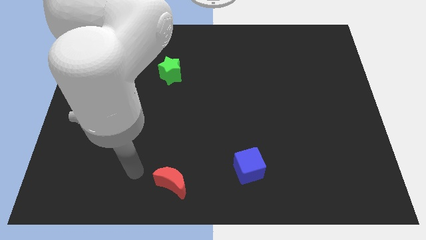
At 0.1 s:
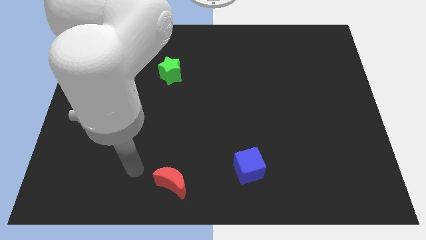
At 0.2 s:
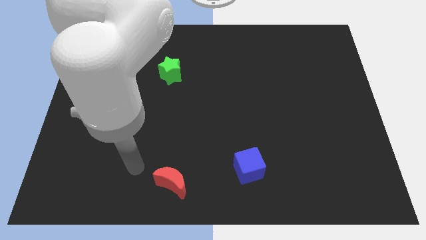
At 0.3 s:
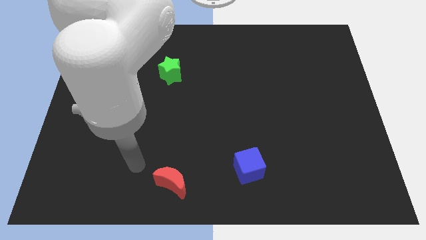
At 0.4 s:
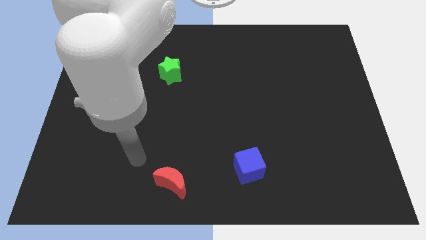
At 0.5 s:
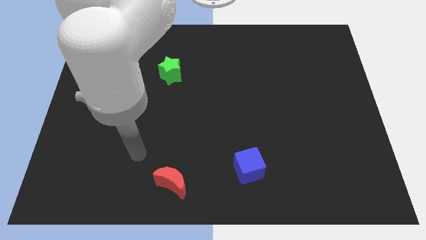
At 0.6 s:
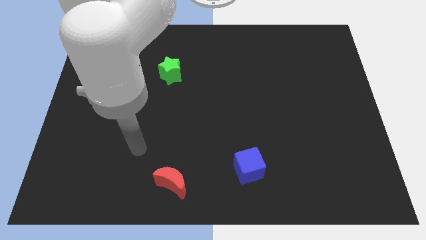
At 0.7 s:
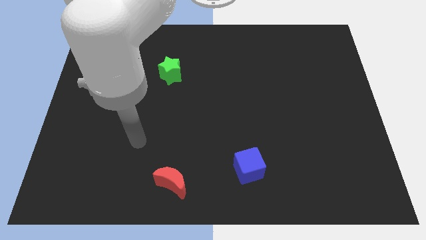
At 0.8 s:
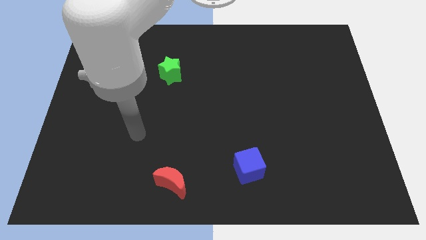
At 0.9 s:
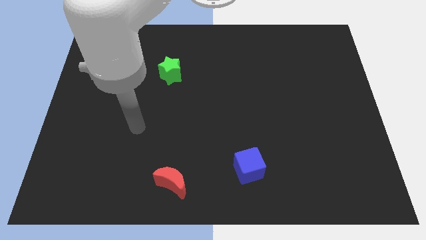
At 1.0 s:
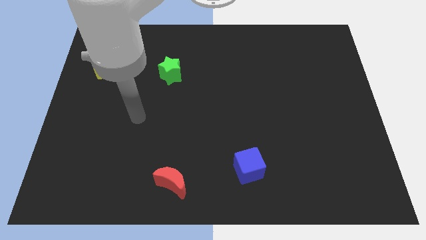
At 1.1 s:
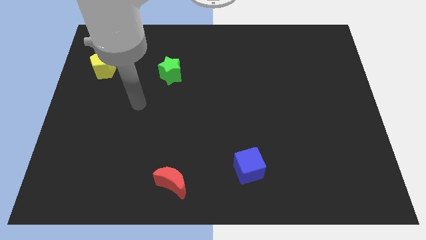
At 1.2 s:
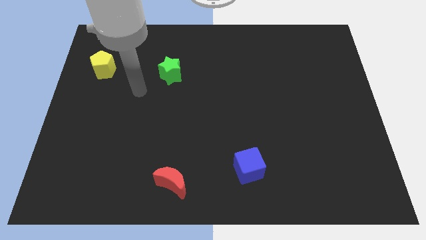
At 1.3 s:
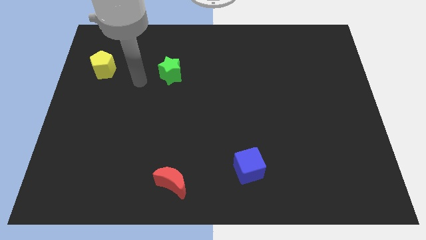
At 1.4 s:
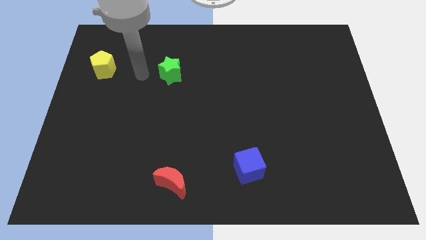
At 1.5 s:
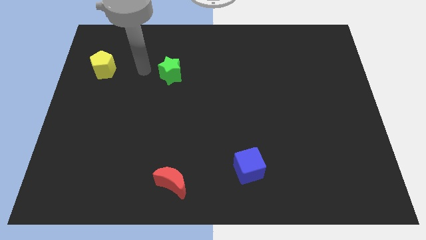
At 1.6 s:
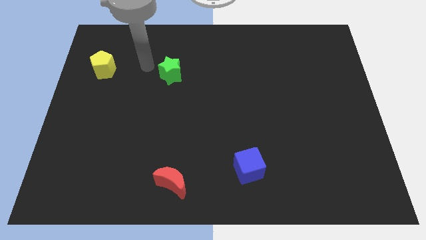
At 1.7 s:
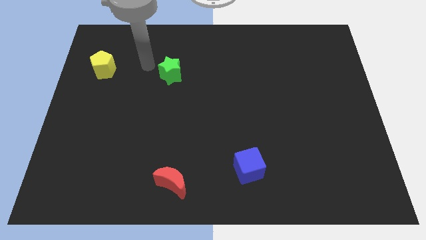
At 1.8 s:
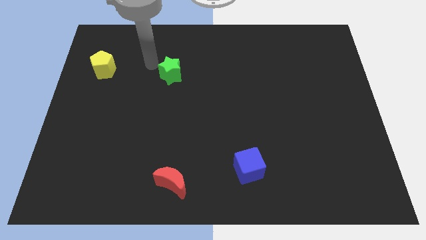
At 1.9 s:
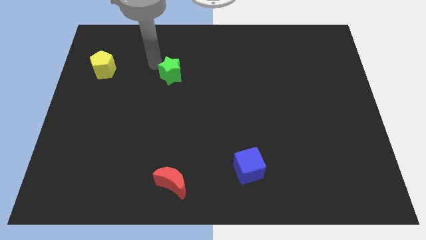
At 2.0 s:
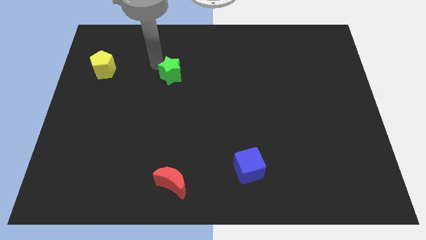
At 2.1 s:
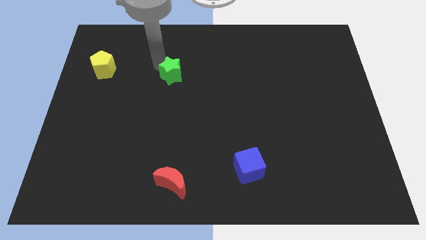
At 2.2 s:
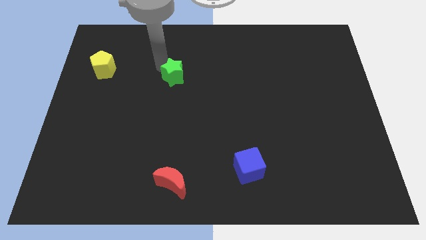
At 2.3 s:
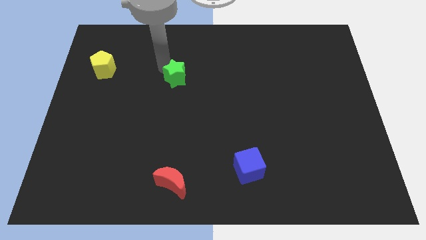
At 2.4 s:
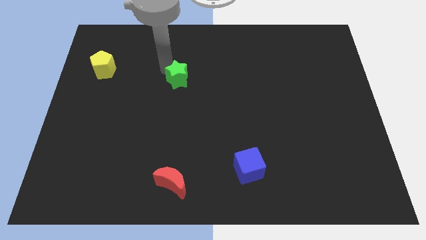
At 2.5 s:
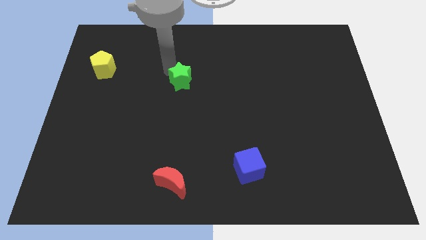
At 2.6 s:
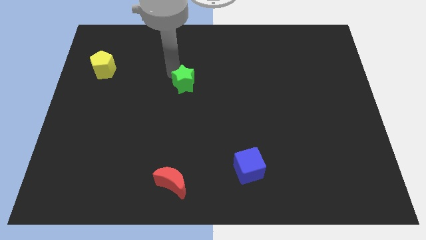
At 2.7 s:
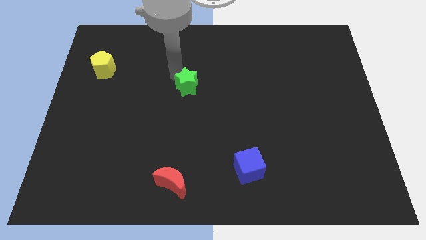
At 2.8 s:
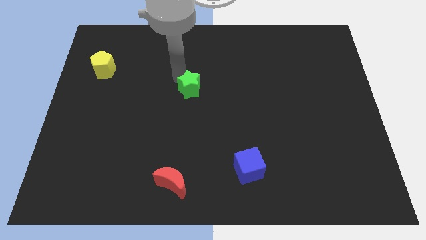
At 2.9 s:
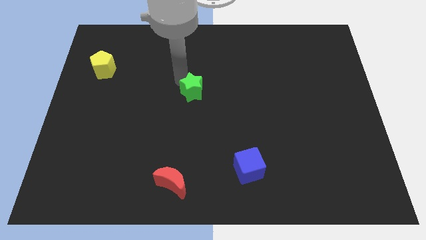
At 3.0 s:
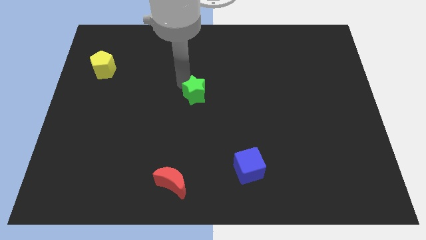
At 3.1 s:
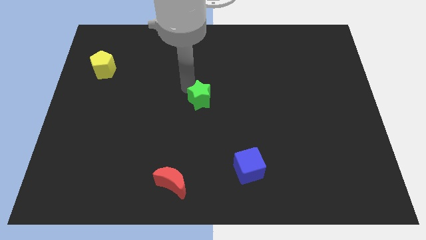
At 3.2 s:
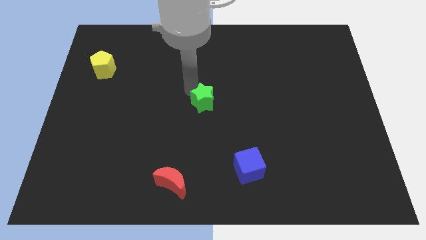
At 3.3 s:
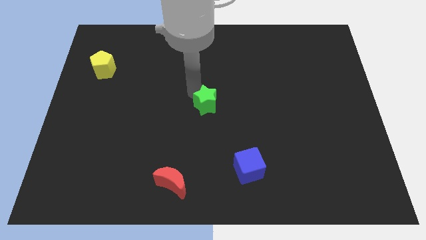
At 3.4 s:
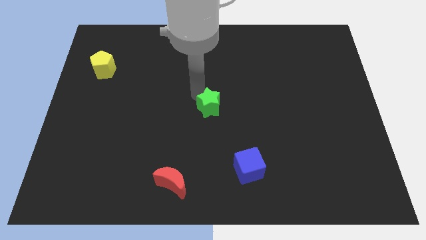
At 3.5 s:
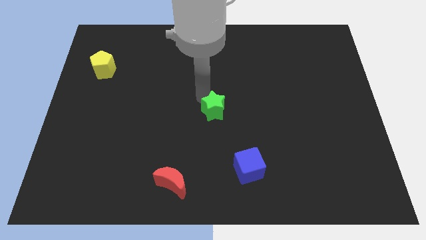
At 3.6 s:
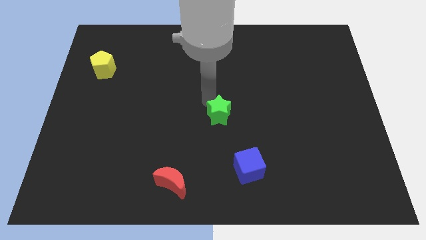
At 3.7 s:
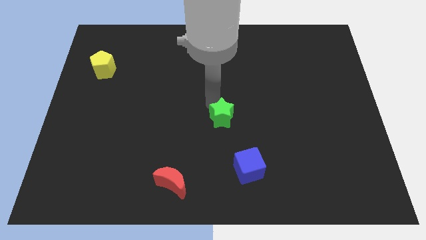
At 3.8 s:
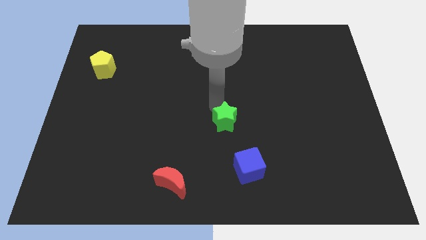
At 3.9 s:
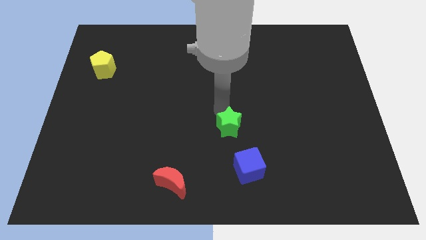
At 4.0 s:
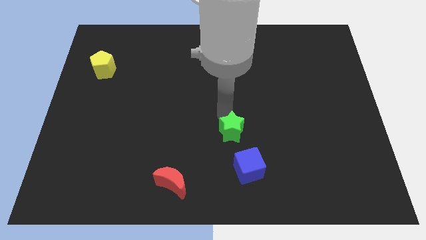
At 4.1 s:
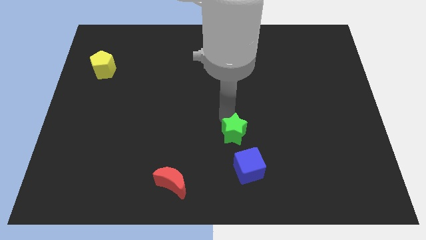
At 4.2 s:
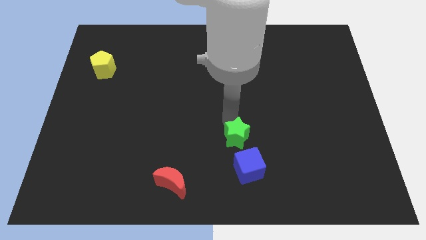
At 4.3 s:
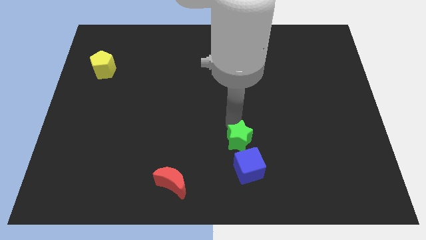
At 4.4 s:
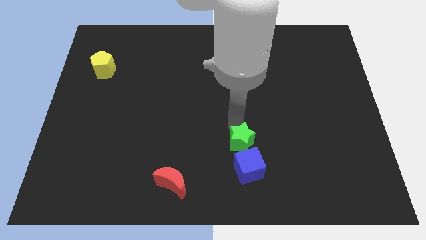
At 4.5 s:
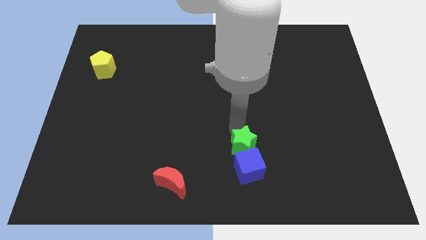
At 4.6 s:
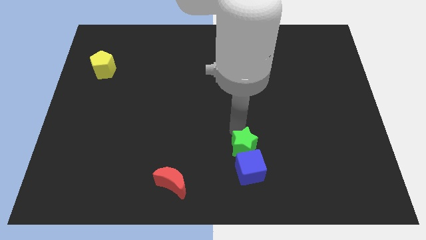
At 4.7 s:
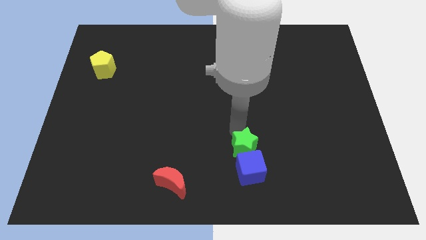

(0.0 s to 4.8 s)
move the green block towards the blue block

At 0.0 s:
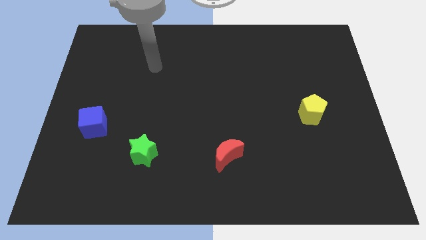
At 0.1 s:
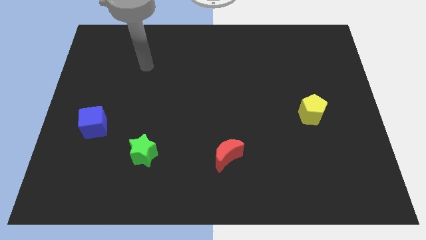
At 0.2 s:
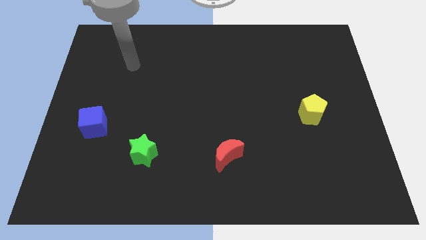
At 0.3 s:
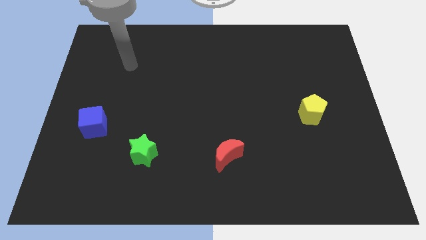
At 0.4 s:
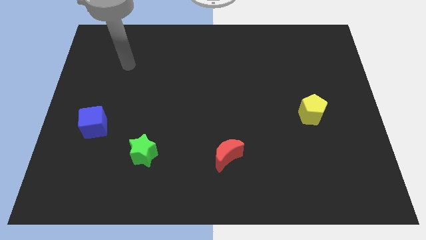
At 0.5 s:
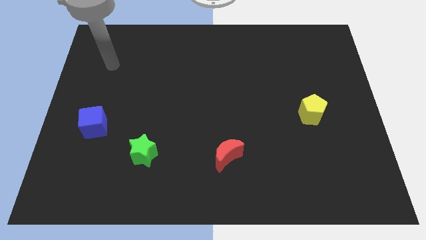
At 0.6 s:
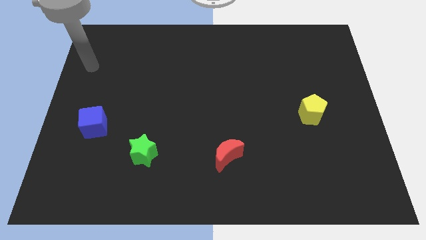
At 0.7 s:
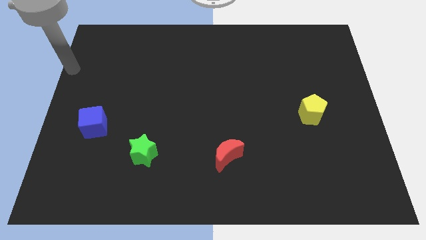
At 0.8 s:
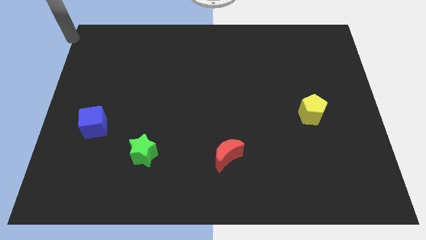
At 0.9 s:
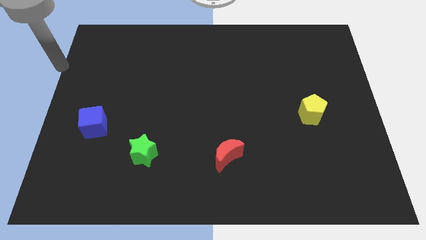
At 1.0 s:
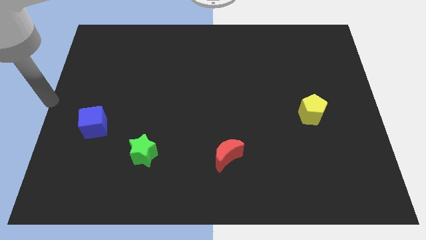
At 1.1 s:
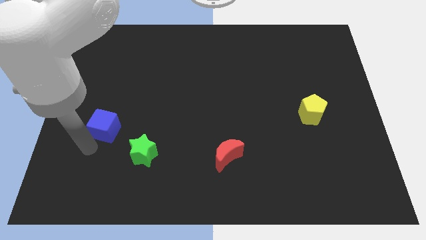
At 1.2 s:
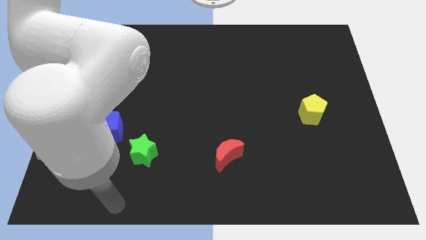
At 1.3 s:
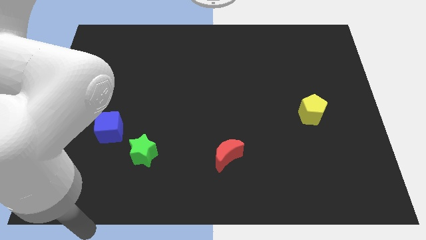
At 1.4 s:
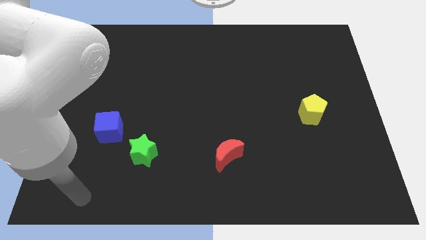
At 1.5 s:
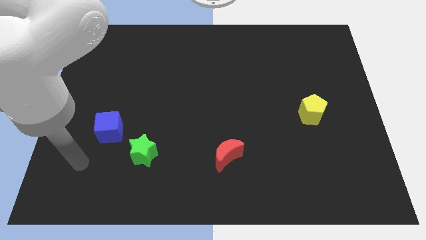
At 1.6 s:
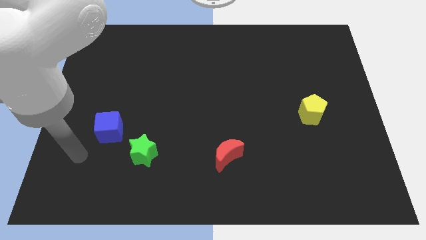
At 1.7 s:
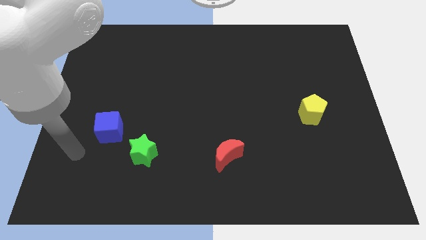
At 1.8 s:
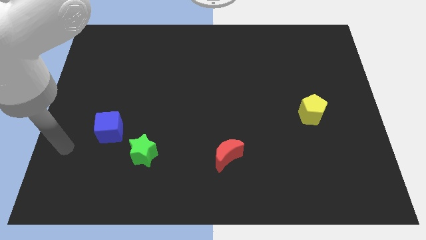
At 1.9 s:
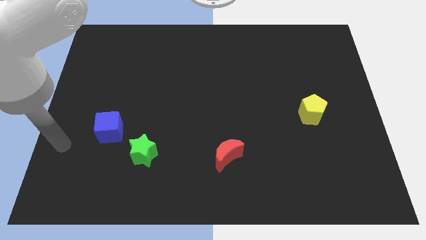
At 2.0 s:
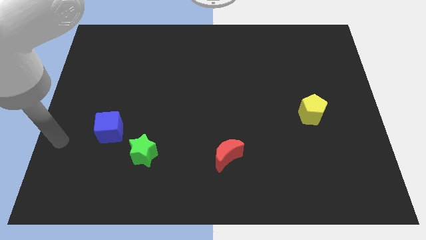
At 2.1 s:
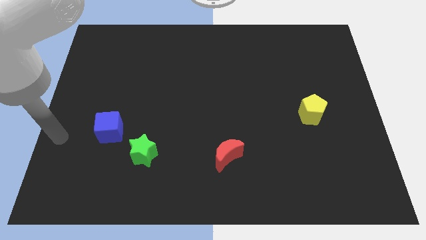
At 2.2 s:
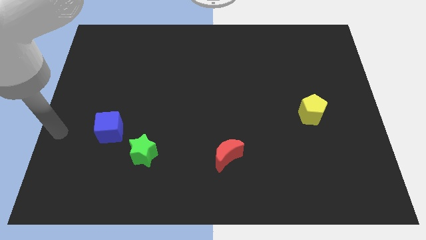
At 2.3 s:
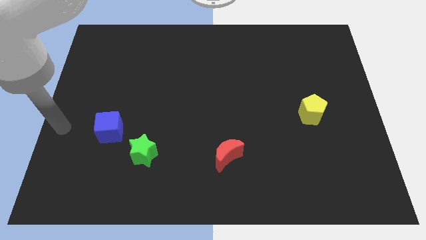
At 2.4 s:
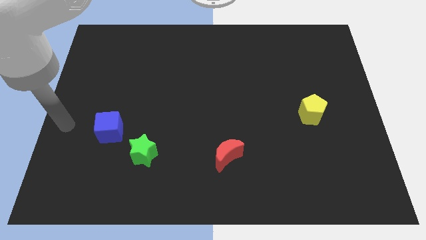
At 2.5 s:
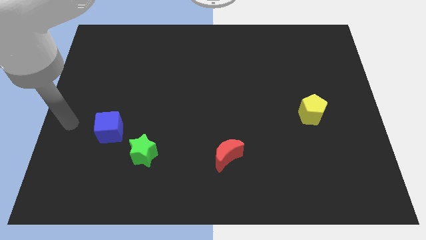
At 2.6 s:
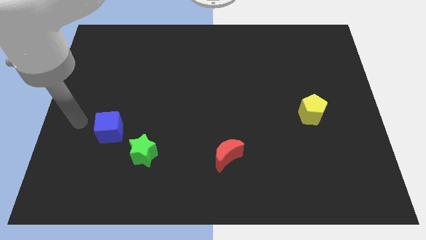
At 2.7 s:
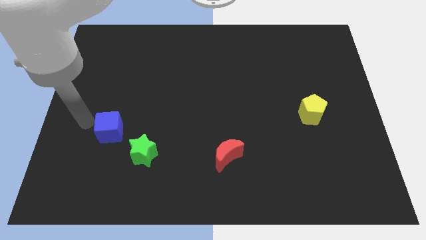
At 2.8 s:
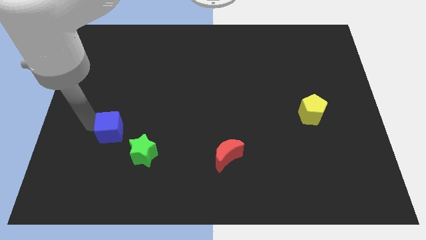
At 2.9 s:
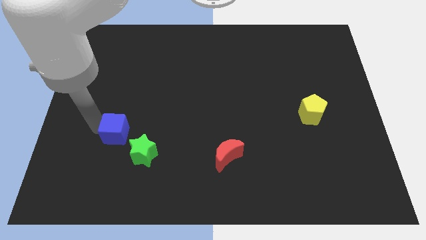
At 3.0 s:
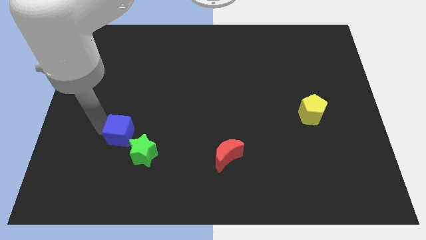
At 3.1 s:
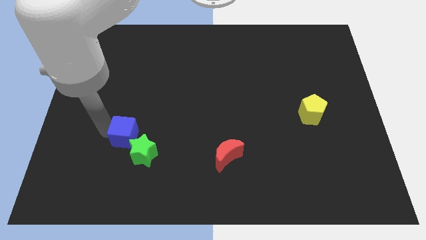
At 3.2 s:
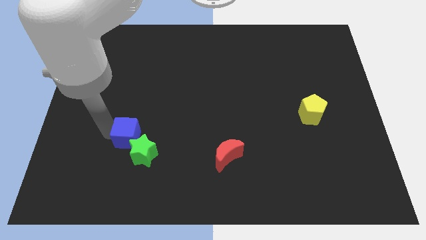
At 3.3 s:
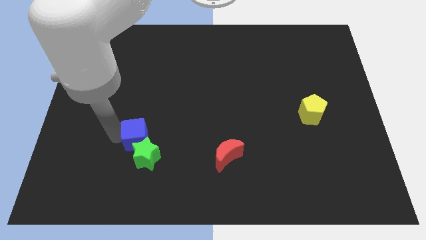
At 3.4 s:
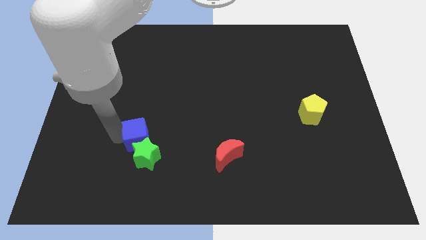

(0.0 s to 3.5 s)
push the cube close to the star

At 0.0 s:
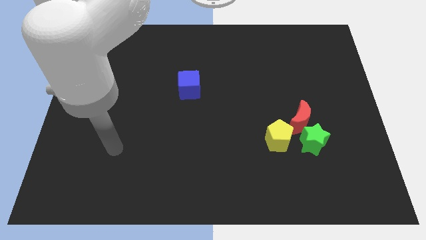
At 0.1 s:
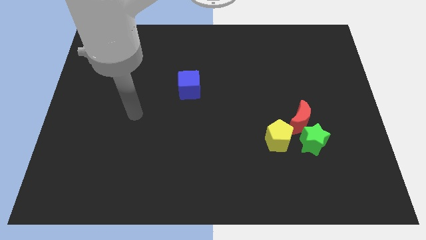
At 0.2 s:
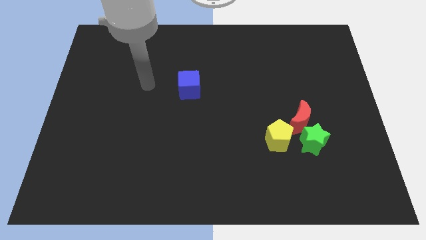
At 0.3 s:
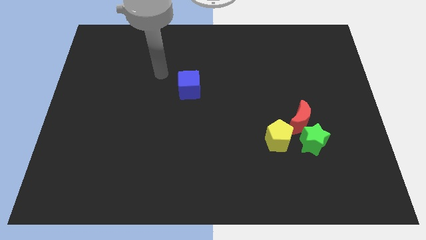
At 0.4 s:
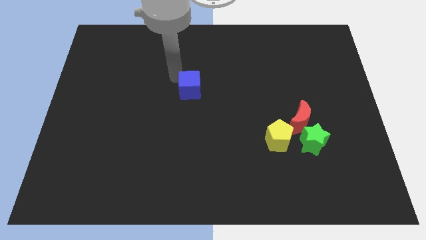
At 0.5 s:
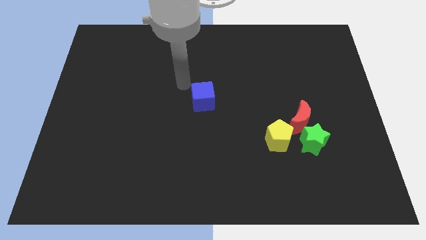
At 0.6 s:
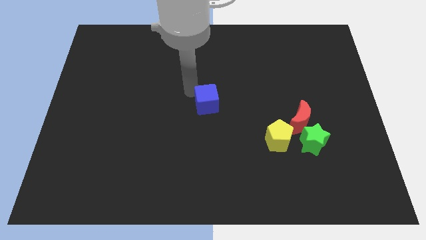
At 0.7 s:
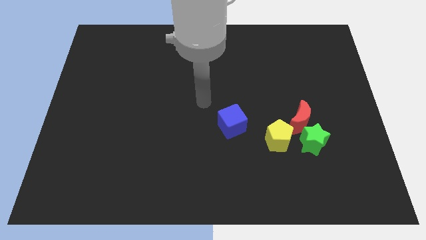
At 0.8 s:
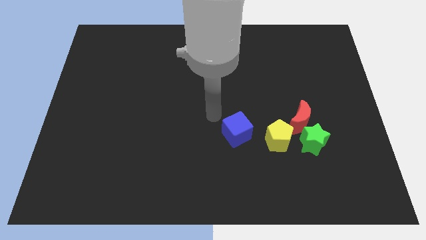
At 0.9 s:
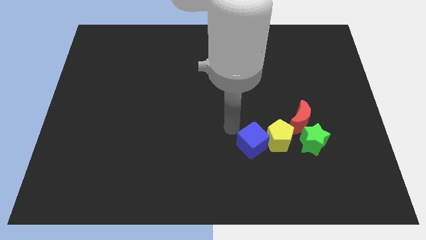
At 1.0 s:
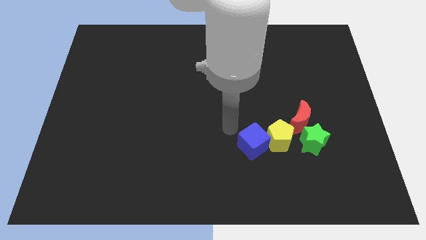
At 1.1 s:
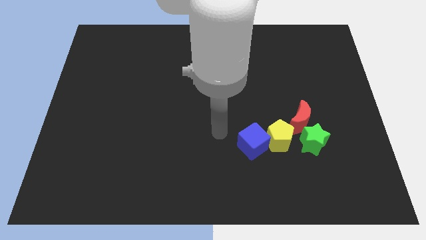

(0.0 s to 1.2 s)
put the cube close to the pentagon
